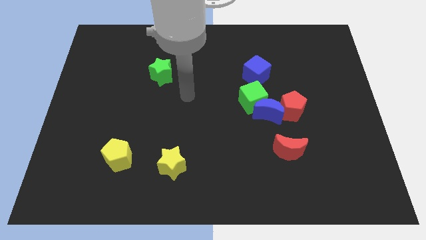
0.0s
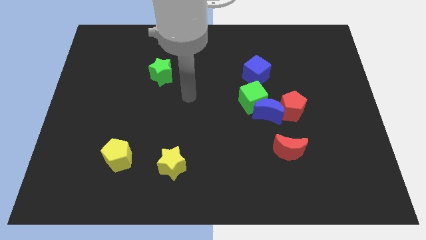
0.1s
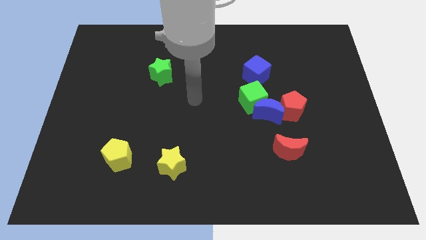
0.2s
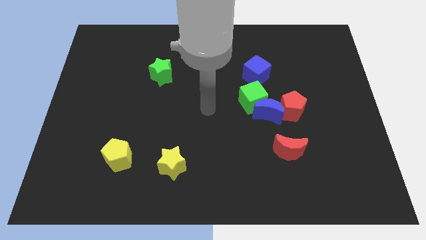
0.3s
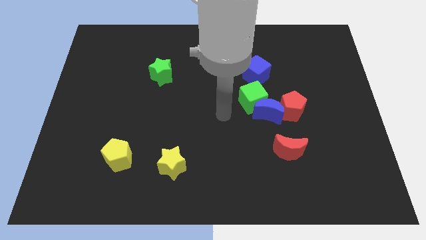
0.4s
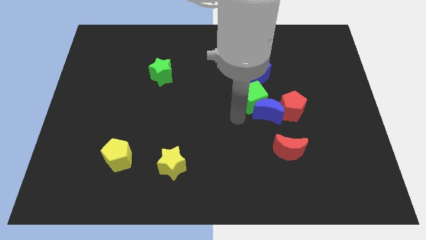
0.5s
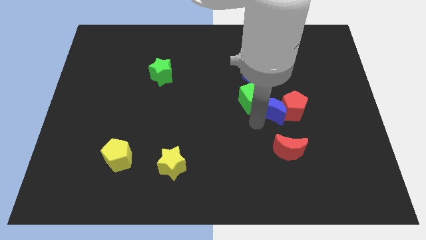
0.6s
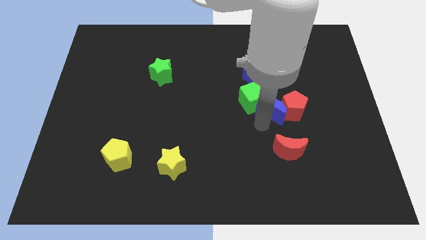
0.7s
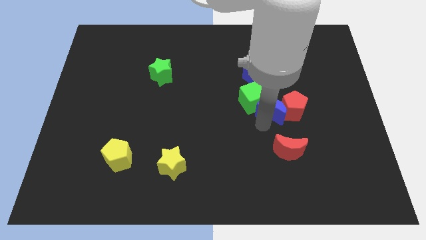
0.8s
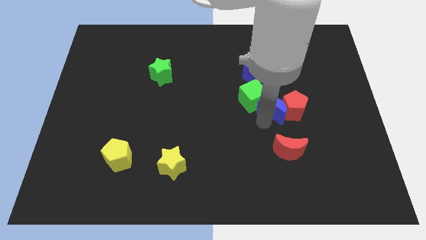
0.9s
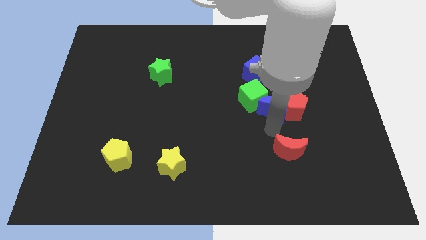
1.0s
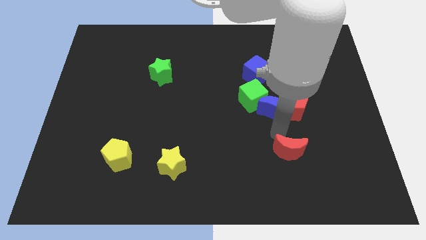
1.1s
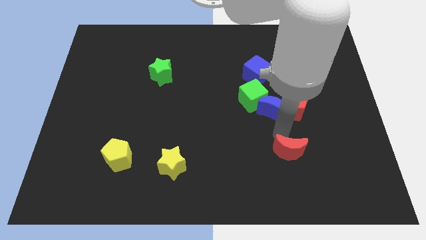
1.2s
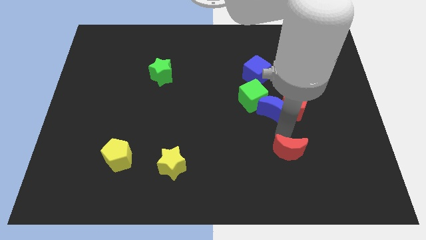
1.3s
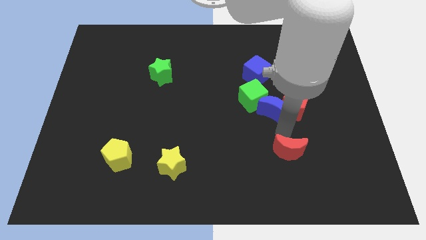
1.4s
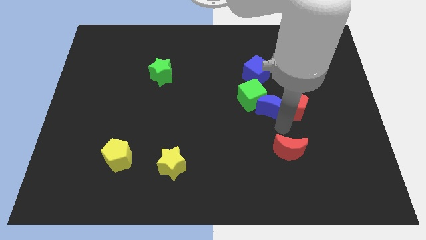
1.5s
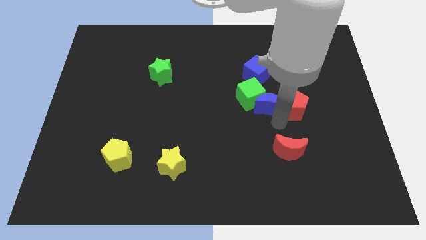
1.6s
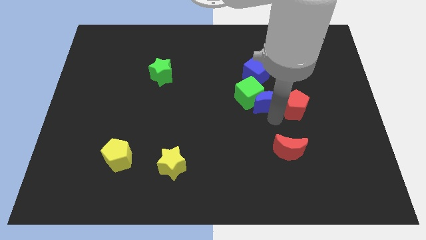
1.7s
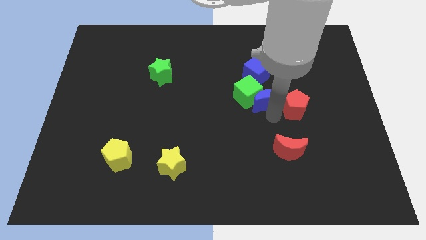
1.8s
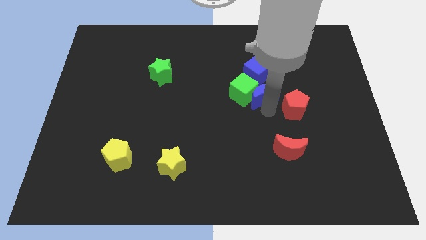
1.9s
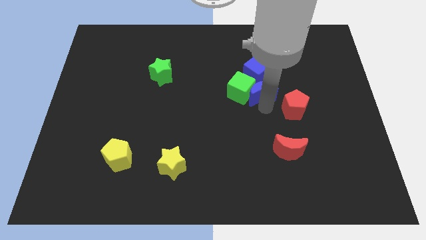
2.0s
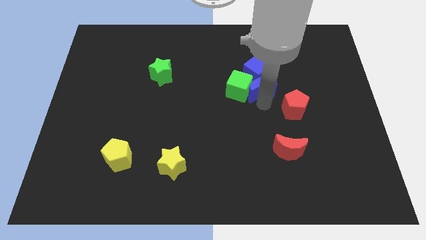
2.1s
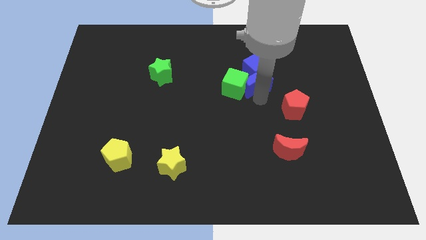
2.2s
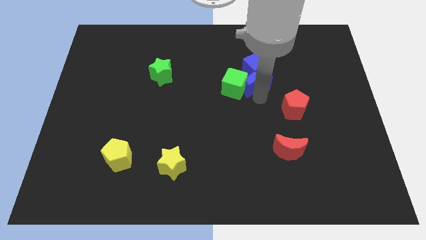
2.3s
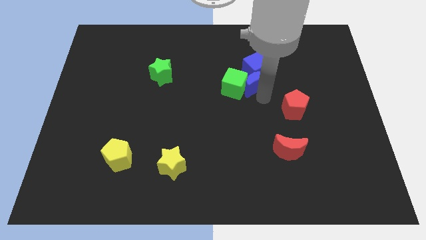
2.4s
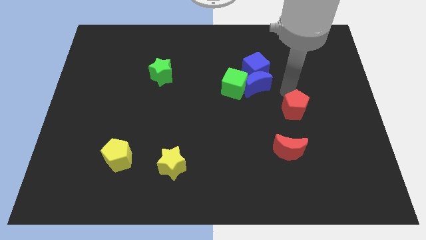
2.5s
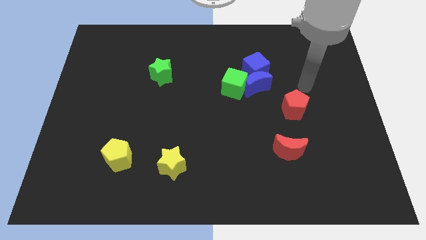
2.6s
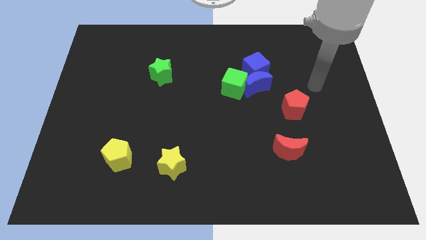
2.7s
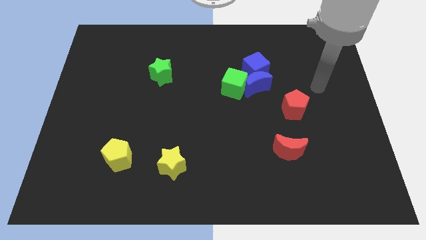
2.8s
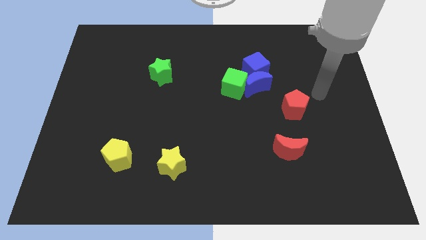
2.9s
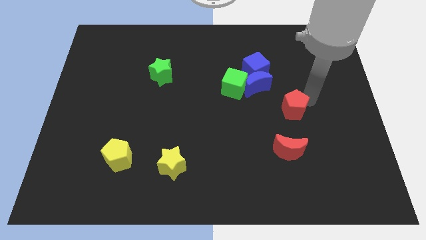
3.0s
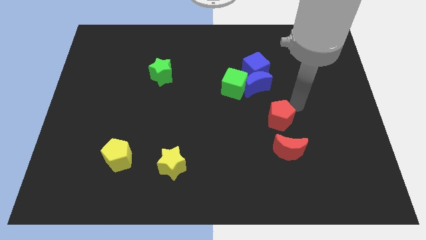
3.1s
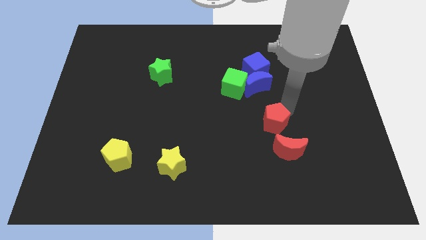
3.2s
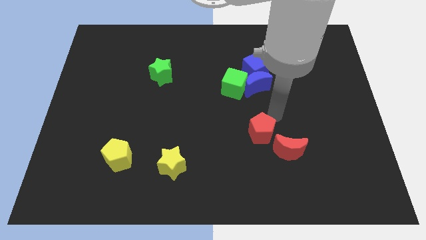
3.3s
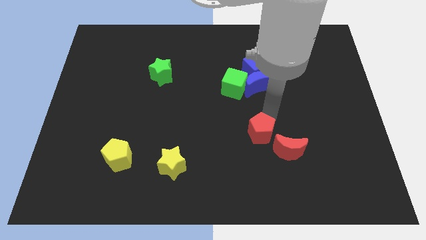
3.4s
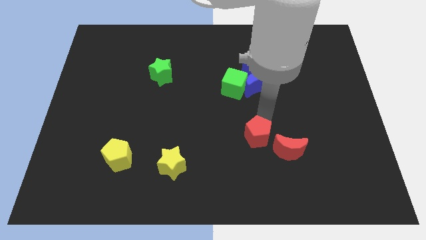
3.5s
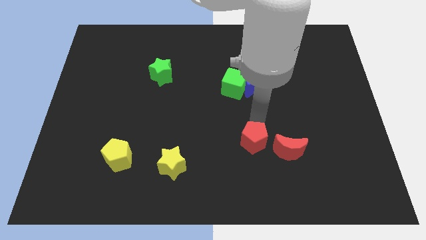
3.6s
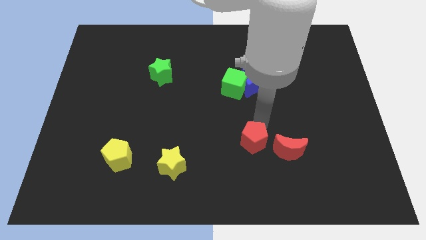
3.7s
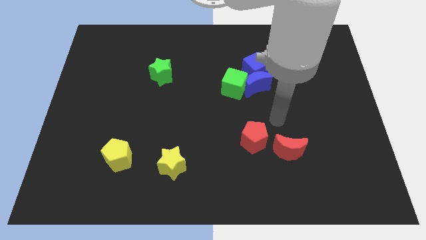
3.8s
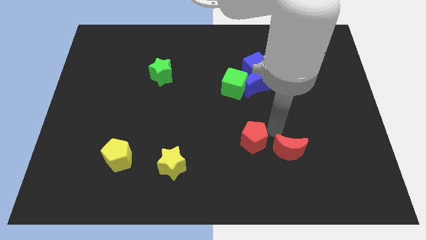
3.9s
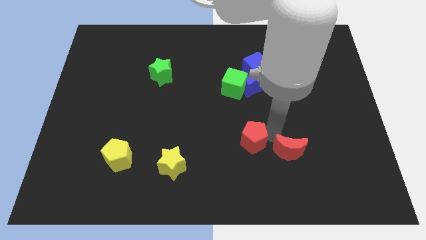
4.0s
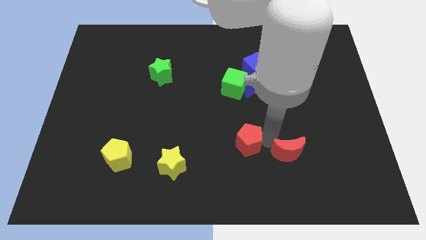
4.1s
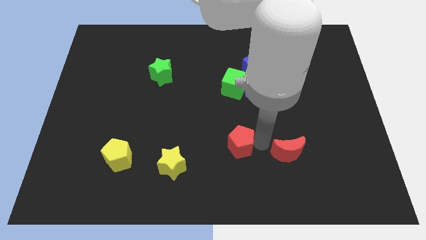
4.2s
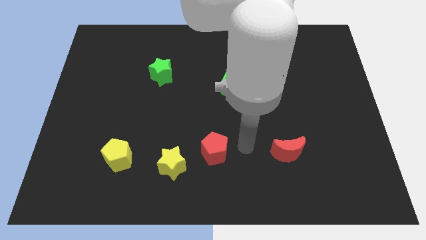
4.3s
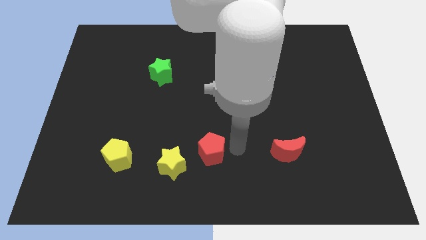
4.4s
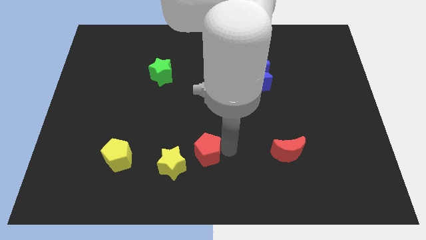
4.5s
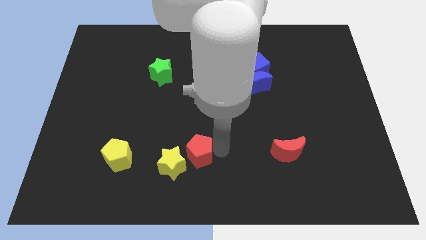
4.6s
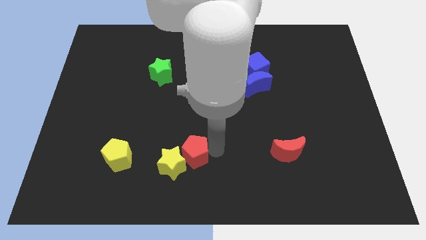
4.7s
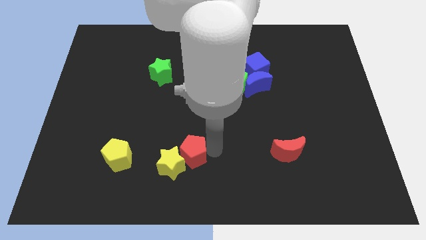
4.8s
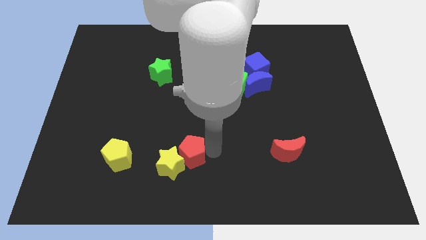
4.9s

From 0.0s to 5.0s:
push the red pentagon to the yellow star

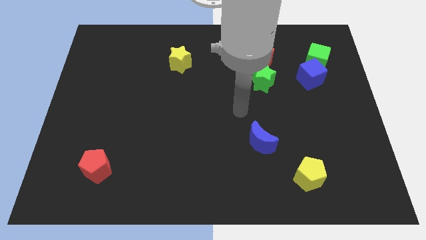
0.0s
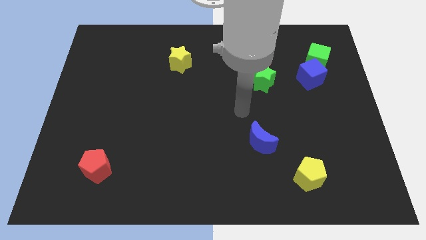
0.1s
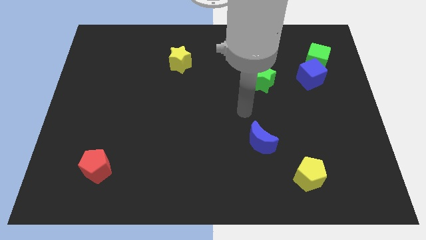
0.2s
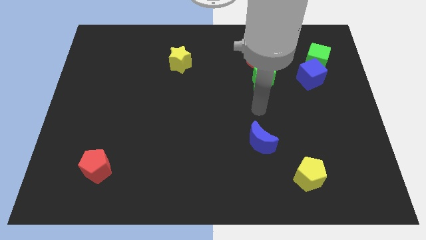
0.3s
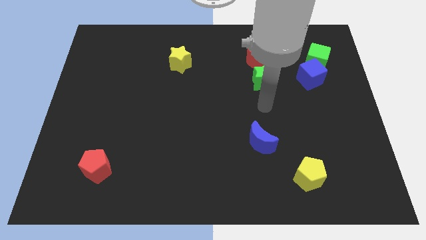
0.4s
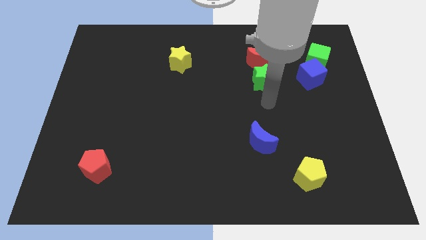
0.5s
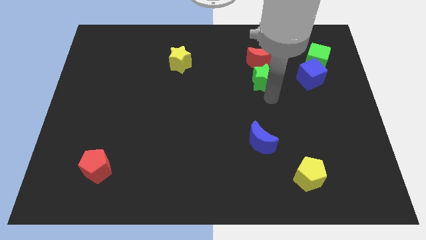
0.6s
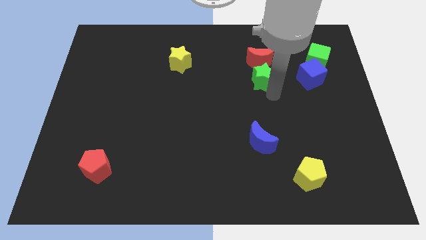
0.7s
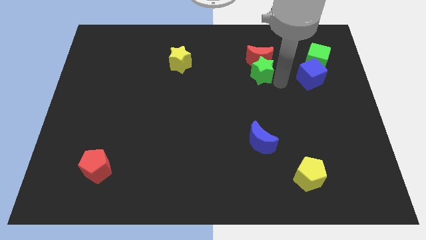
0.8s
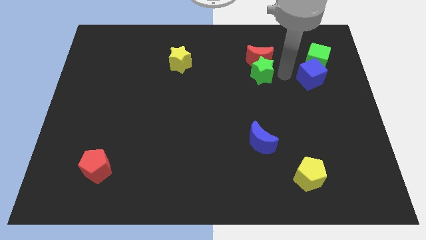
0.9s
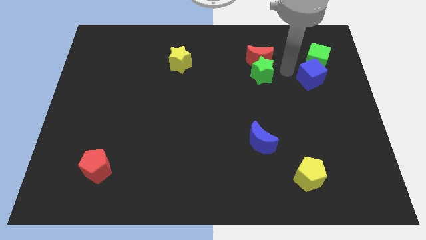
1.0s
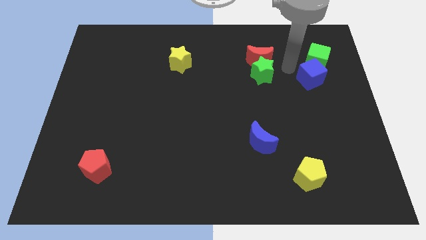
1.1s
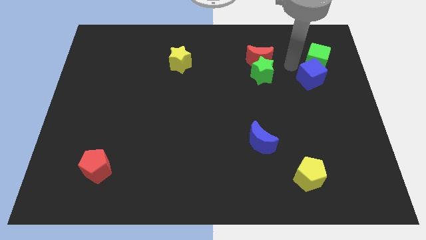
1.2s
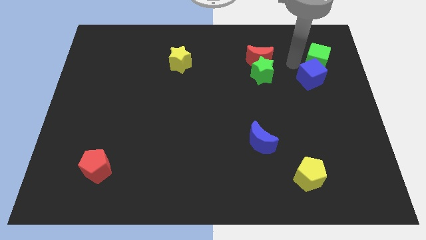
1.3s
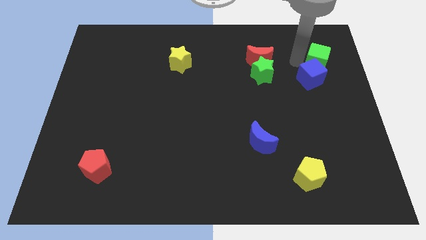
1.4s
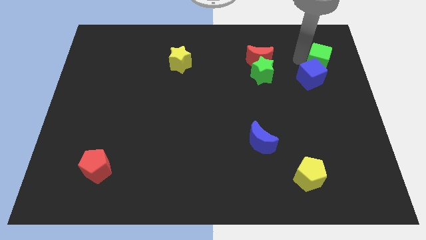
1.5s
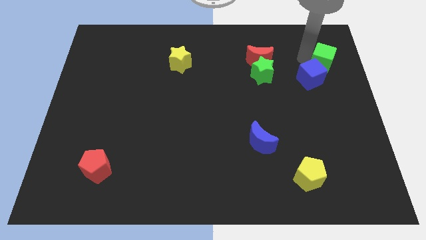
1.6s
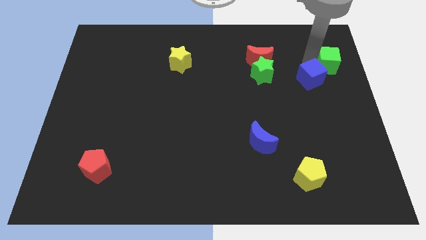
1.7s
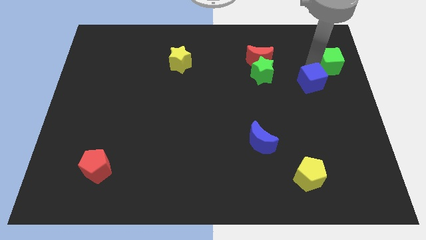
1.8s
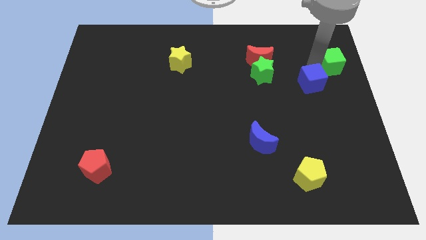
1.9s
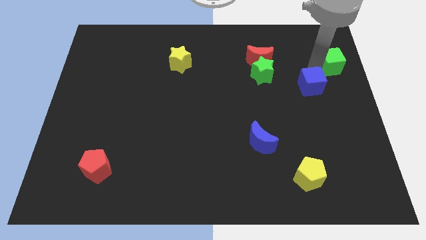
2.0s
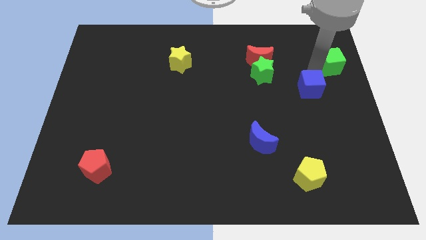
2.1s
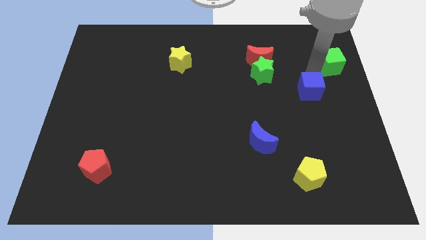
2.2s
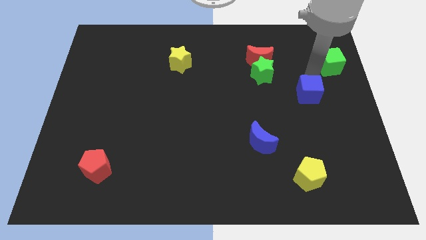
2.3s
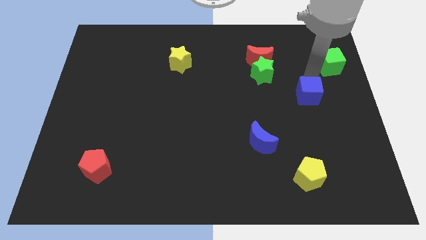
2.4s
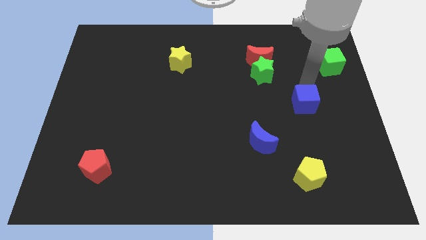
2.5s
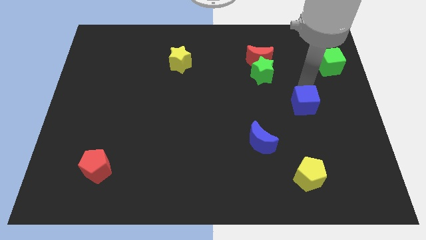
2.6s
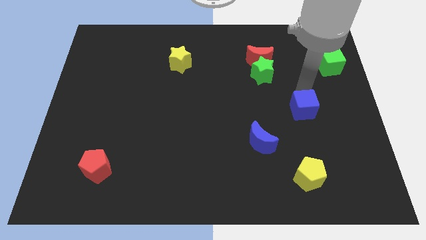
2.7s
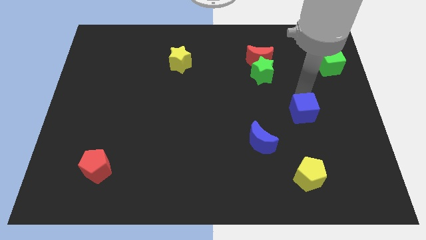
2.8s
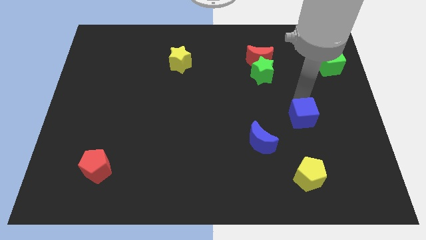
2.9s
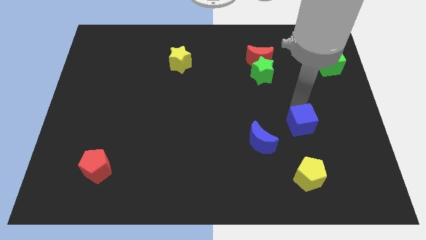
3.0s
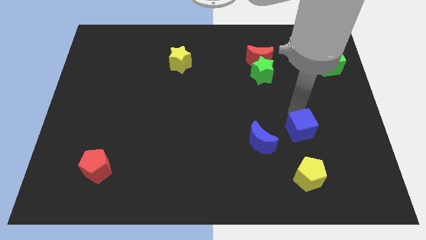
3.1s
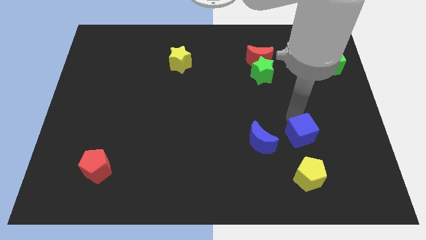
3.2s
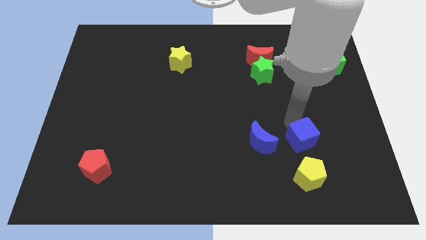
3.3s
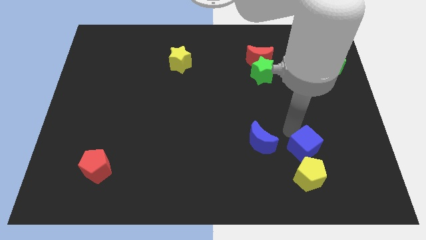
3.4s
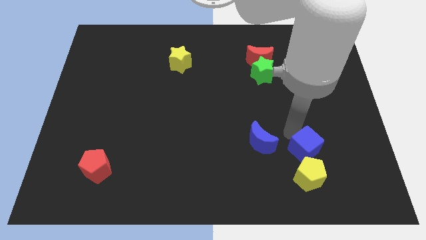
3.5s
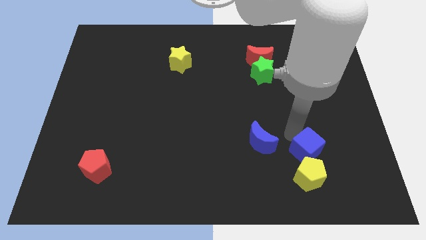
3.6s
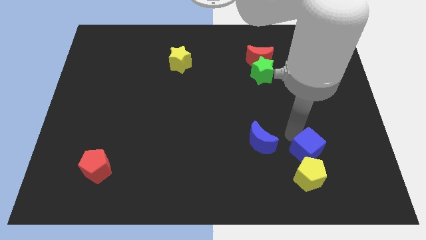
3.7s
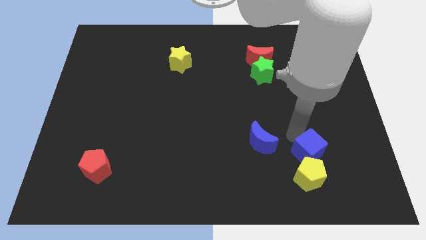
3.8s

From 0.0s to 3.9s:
move the blue cube next to the yellow pentagon
